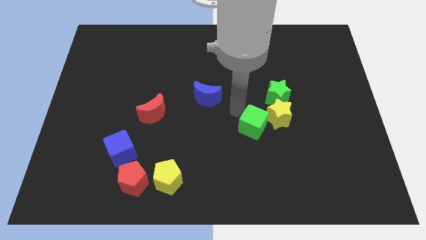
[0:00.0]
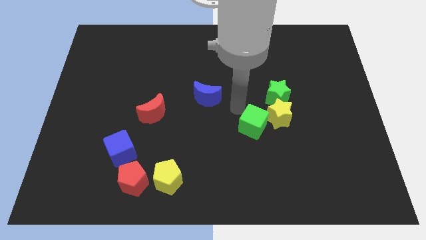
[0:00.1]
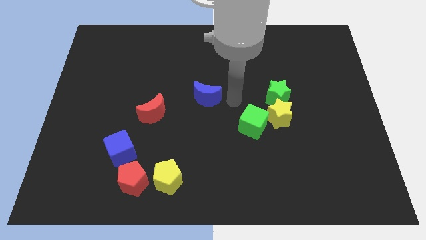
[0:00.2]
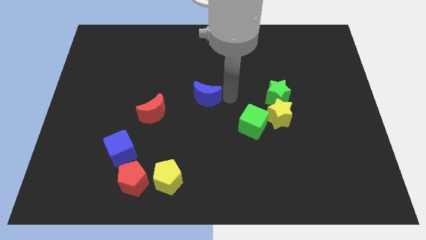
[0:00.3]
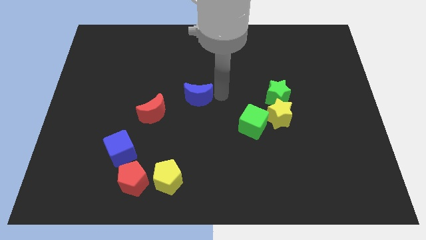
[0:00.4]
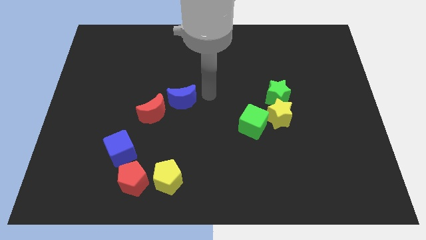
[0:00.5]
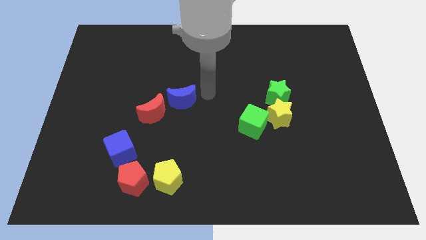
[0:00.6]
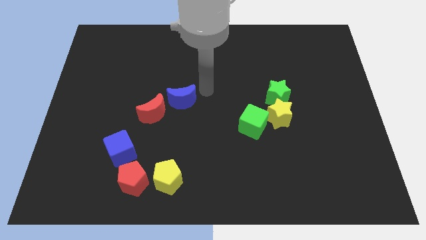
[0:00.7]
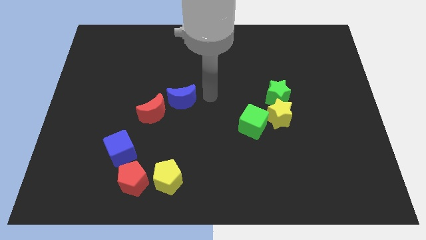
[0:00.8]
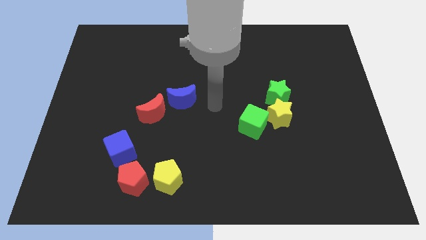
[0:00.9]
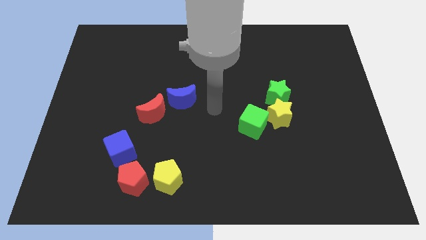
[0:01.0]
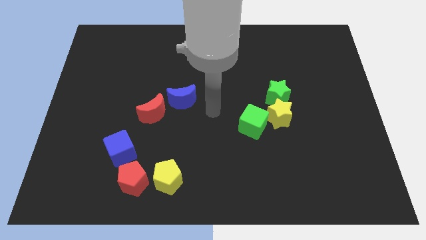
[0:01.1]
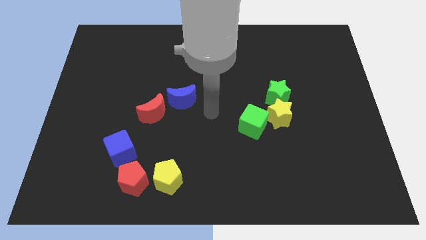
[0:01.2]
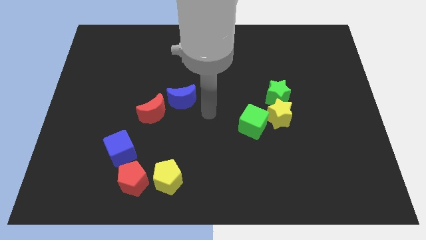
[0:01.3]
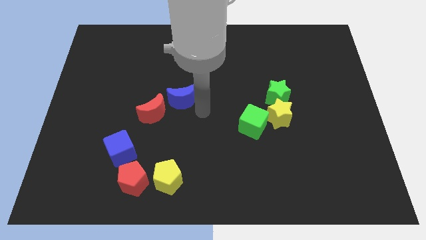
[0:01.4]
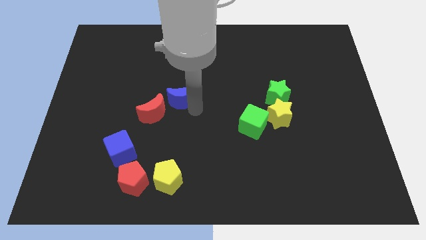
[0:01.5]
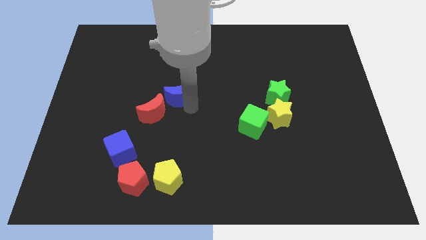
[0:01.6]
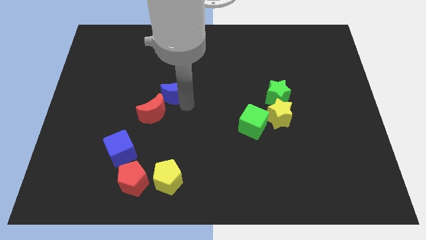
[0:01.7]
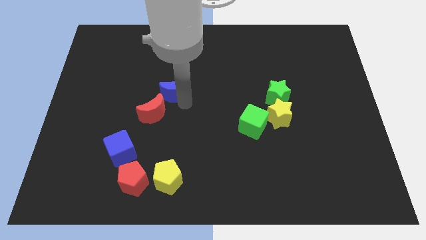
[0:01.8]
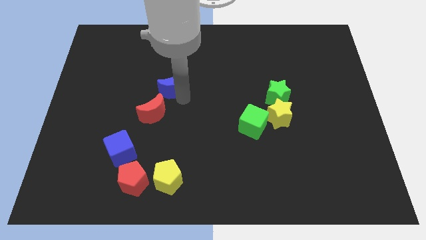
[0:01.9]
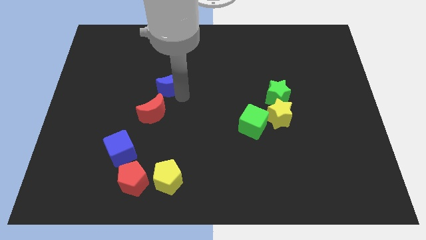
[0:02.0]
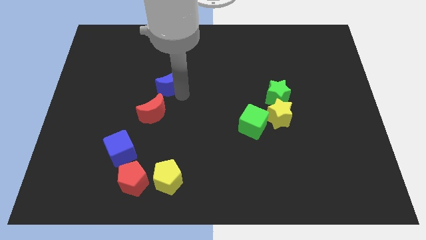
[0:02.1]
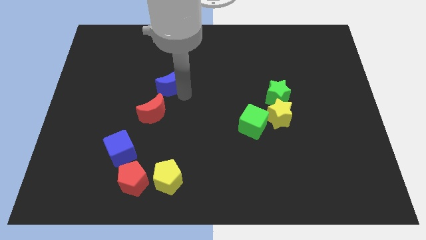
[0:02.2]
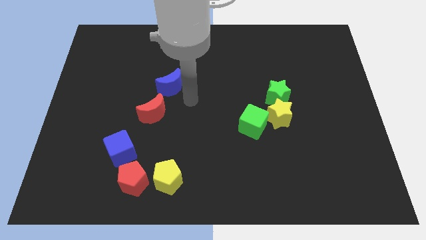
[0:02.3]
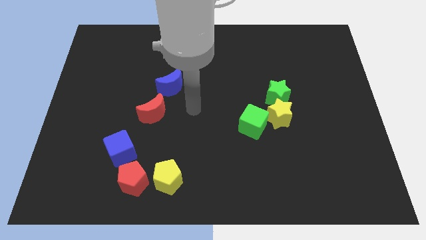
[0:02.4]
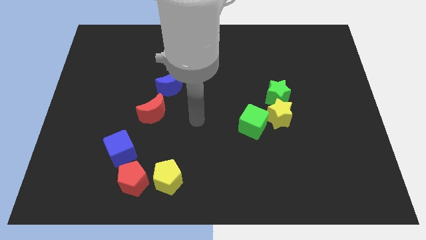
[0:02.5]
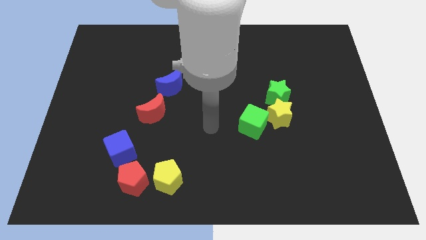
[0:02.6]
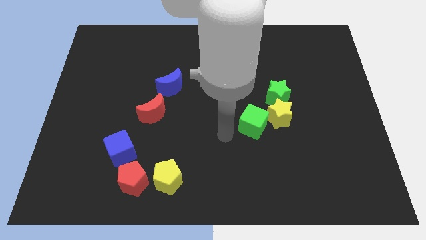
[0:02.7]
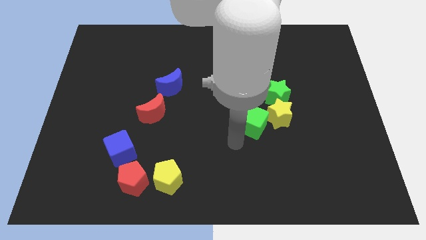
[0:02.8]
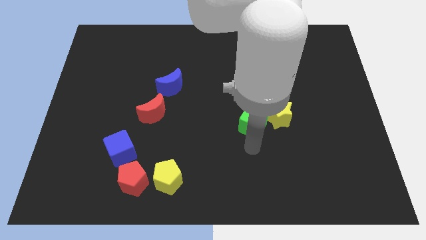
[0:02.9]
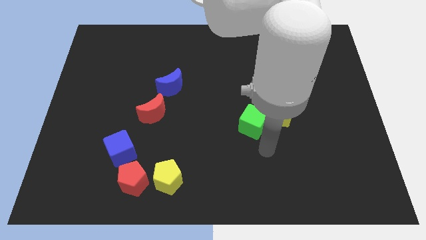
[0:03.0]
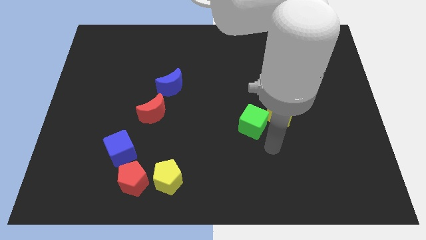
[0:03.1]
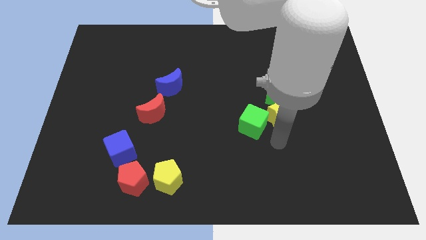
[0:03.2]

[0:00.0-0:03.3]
move the blue moon to the top right of the red moon

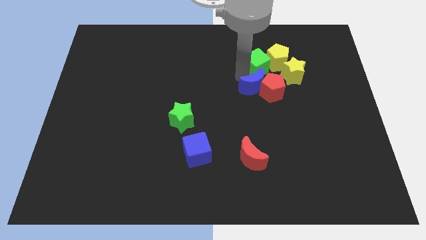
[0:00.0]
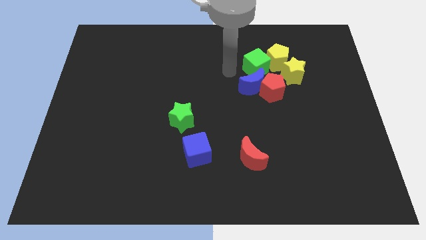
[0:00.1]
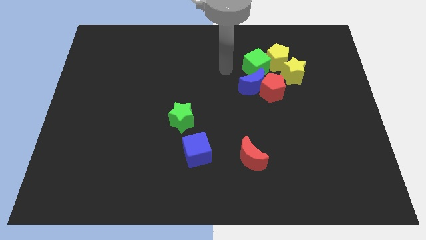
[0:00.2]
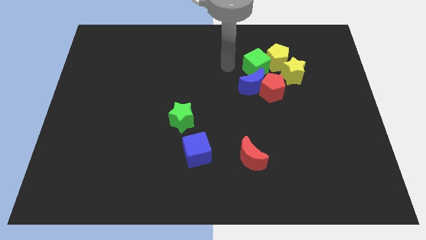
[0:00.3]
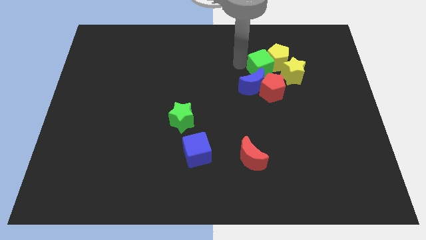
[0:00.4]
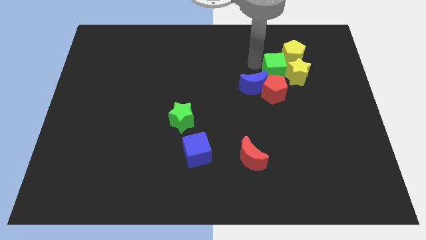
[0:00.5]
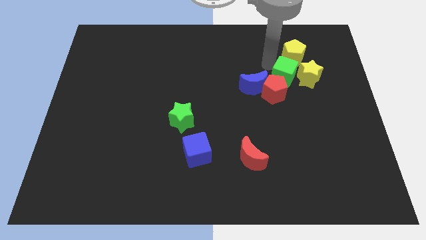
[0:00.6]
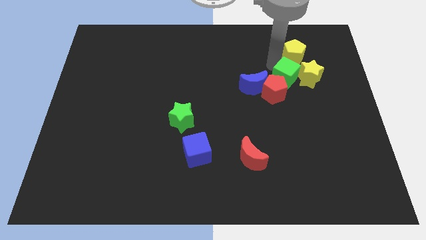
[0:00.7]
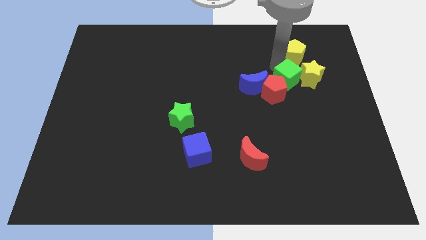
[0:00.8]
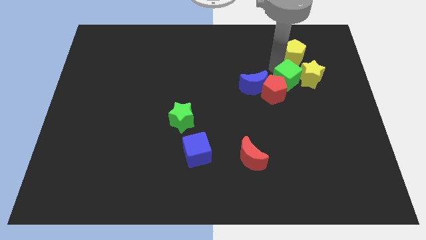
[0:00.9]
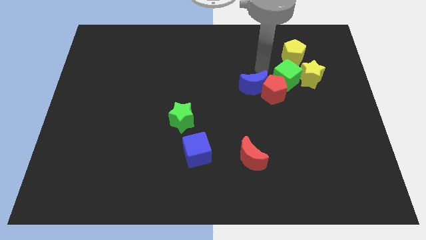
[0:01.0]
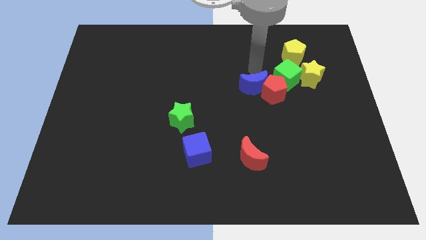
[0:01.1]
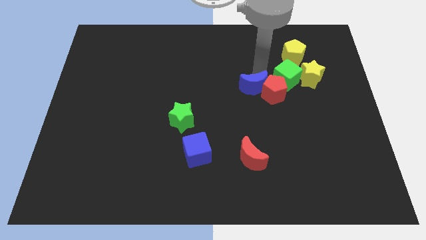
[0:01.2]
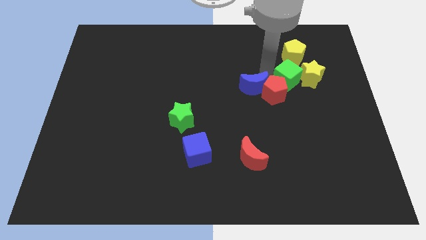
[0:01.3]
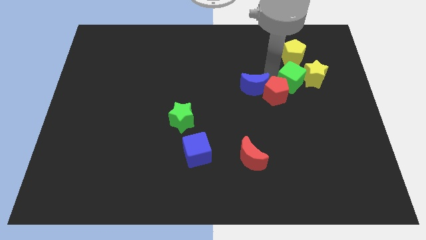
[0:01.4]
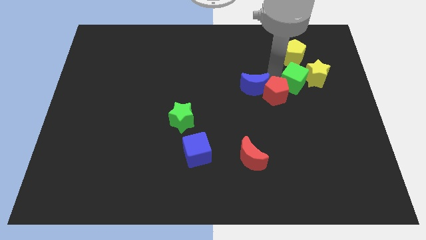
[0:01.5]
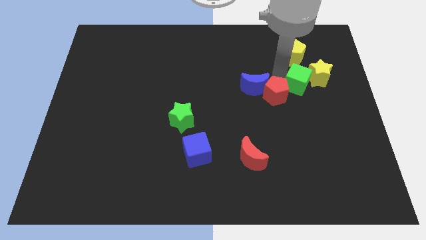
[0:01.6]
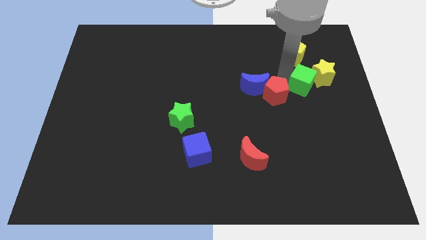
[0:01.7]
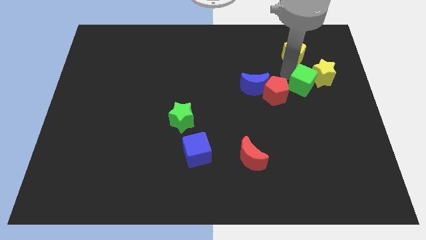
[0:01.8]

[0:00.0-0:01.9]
push a group of blocks to the right side of the board

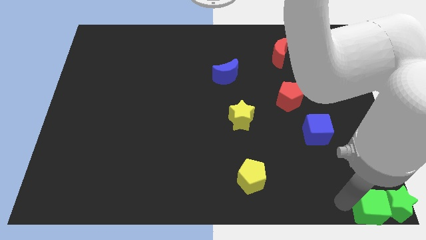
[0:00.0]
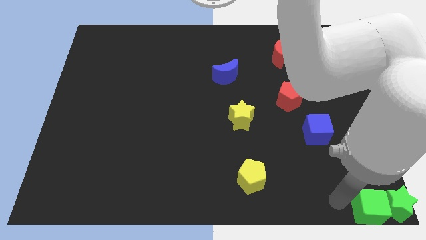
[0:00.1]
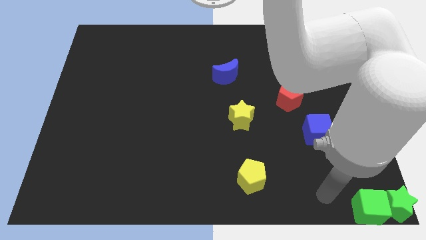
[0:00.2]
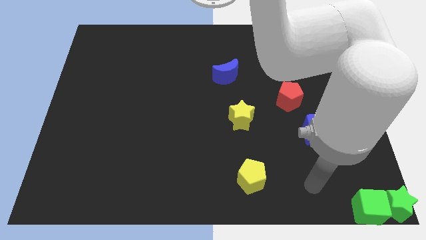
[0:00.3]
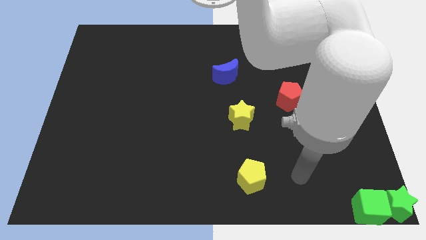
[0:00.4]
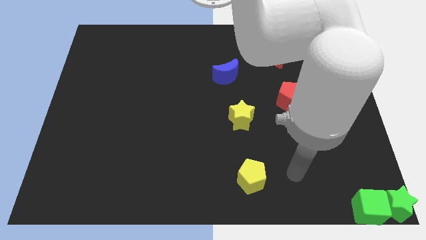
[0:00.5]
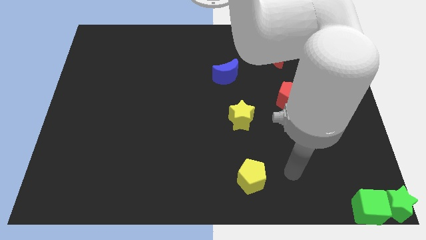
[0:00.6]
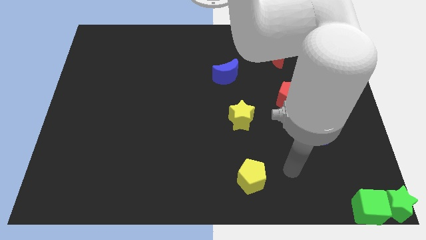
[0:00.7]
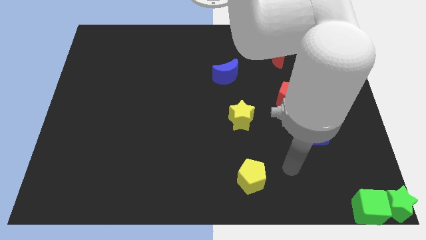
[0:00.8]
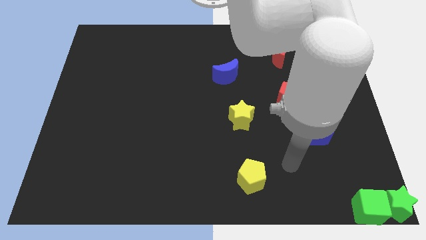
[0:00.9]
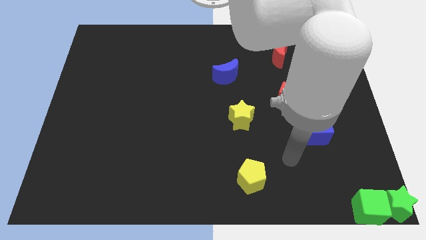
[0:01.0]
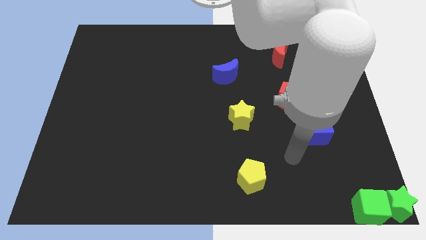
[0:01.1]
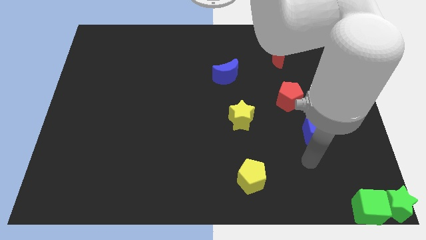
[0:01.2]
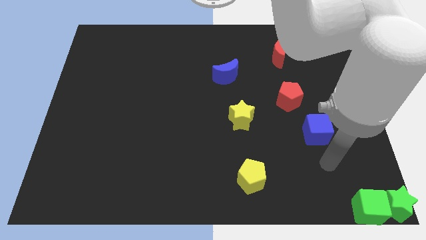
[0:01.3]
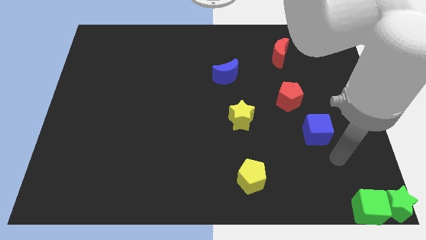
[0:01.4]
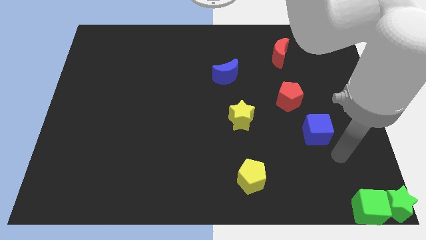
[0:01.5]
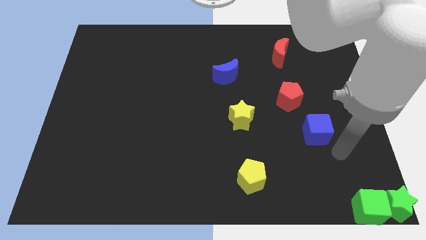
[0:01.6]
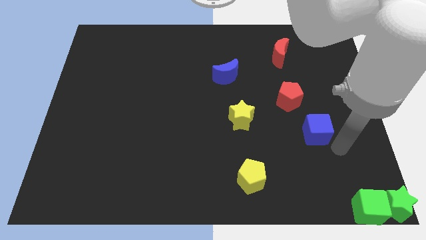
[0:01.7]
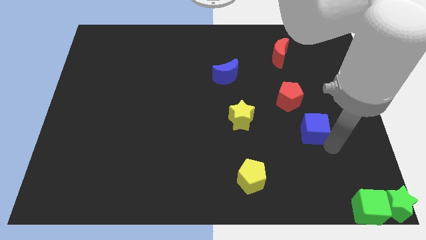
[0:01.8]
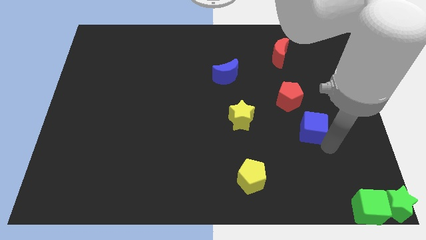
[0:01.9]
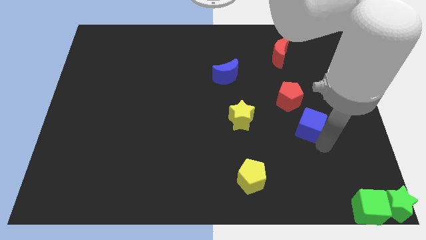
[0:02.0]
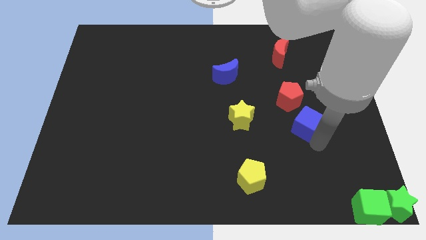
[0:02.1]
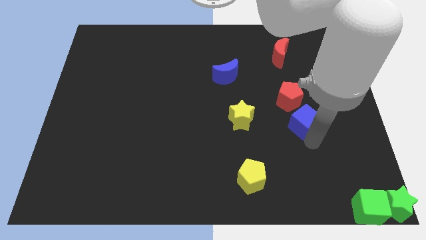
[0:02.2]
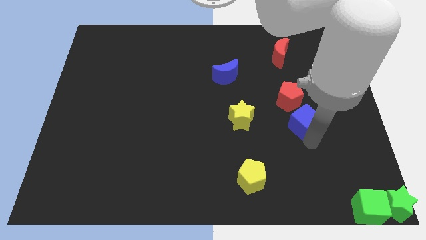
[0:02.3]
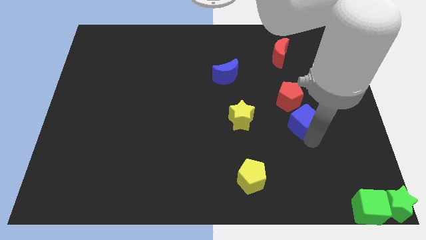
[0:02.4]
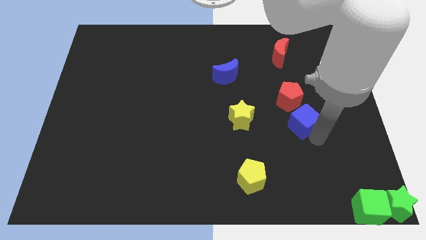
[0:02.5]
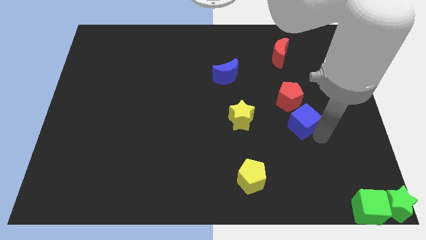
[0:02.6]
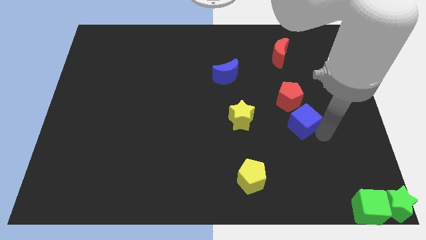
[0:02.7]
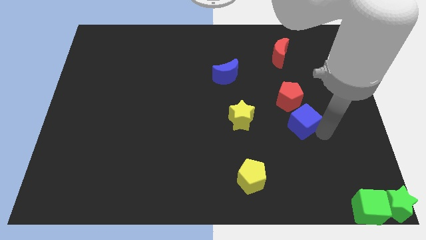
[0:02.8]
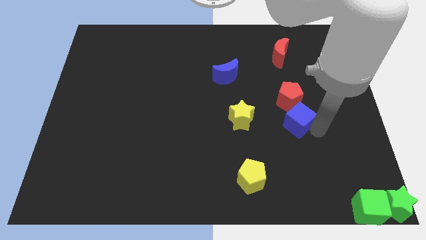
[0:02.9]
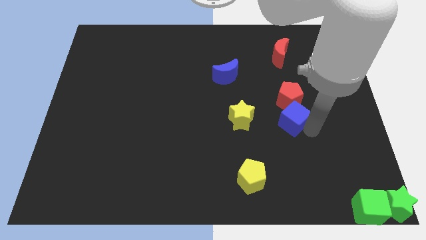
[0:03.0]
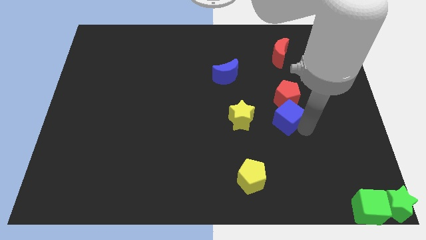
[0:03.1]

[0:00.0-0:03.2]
push the blue cube to the bottom of the red pentagon

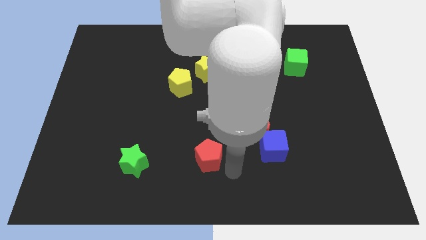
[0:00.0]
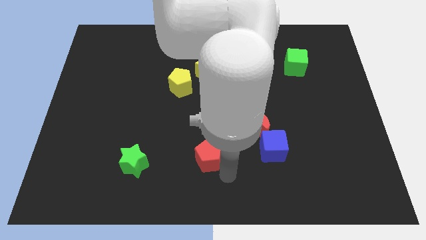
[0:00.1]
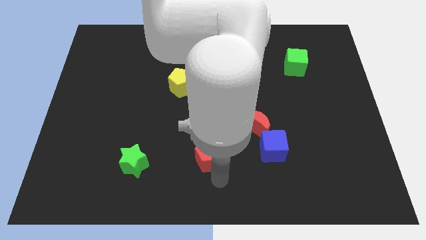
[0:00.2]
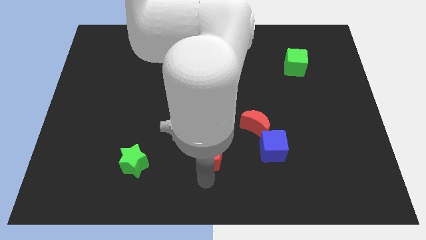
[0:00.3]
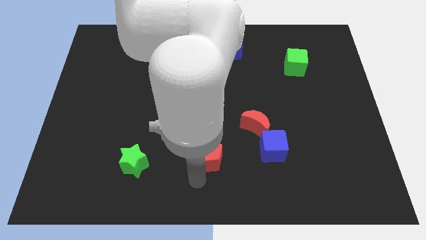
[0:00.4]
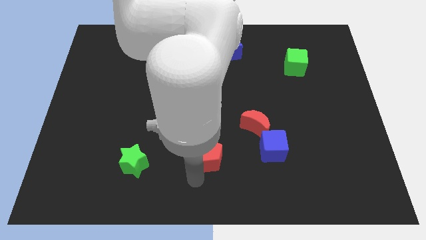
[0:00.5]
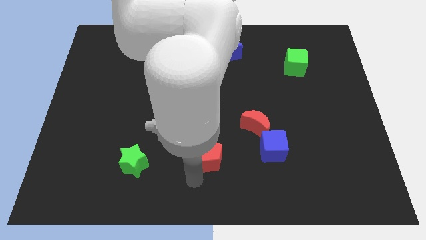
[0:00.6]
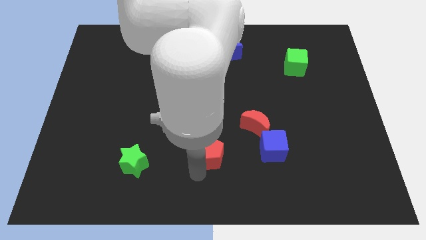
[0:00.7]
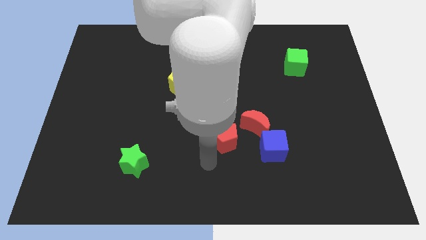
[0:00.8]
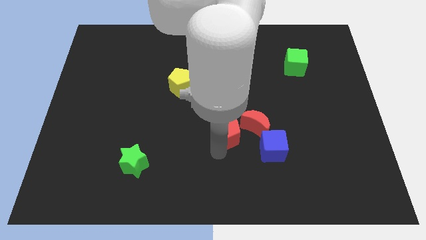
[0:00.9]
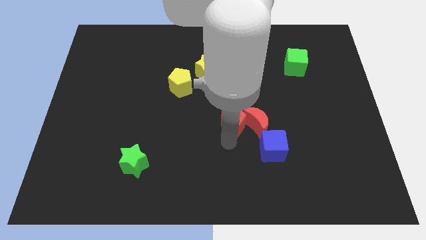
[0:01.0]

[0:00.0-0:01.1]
push the red pentagon into the red moon
